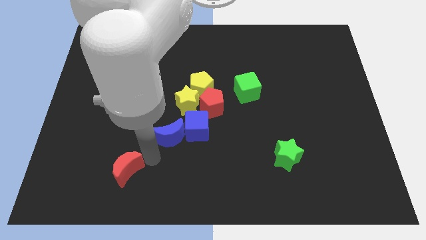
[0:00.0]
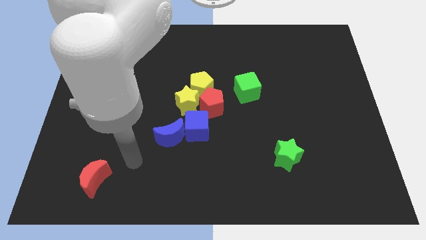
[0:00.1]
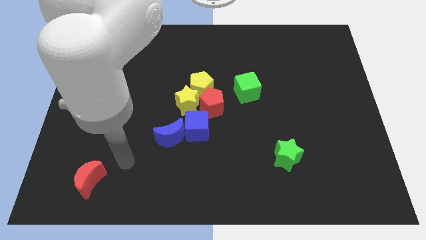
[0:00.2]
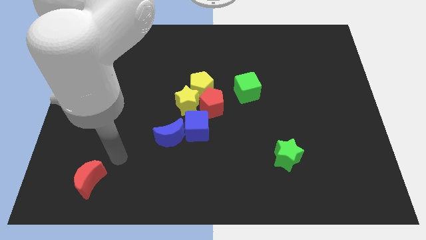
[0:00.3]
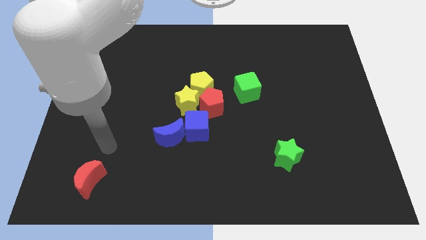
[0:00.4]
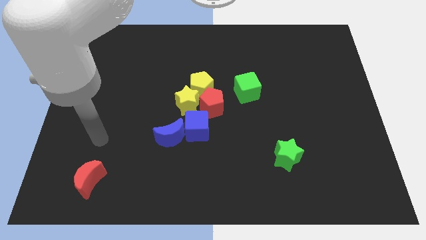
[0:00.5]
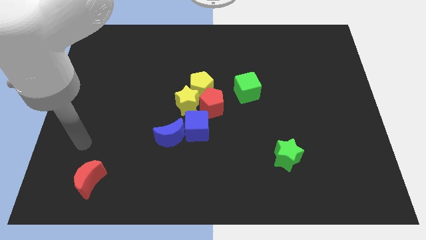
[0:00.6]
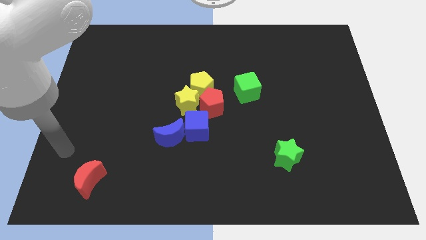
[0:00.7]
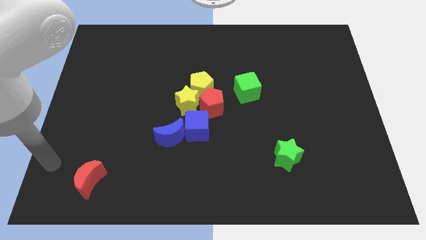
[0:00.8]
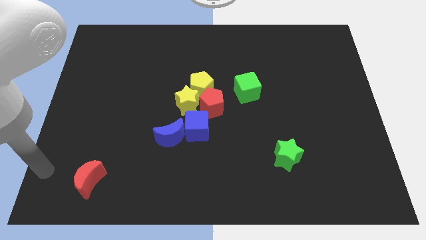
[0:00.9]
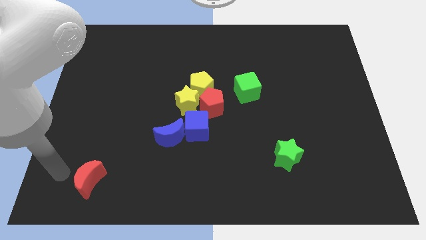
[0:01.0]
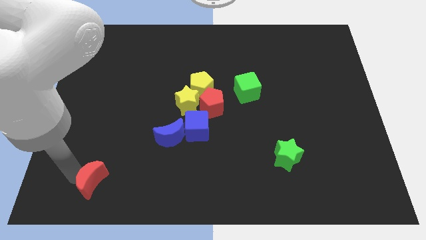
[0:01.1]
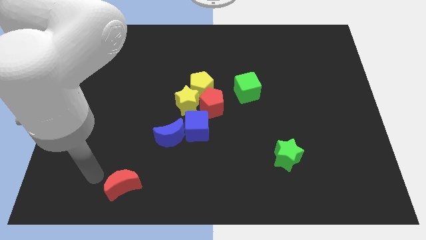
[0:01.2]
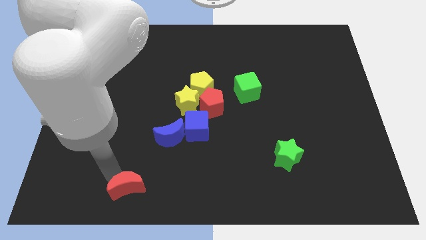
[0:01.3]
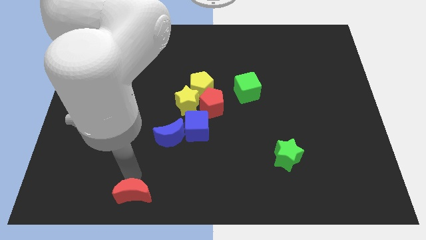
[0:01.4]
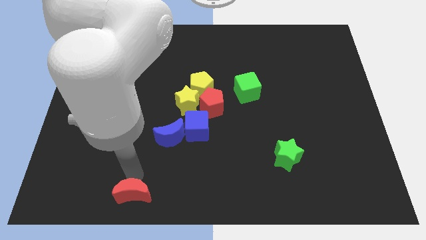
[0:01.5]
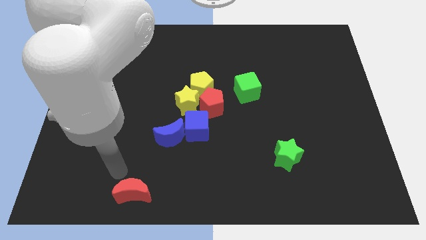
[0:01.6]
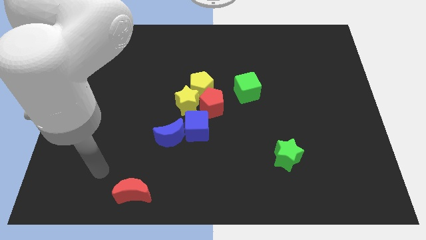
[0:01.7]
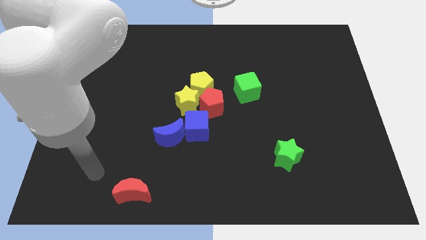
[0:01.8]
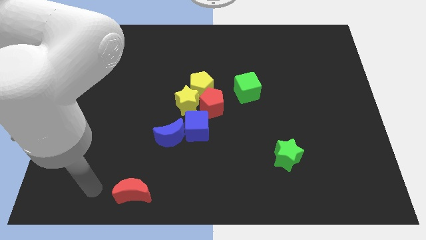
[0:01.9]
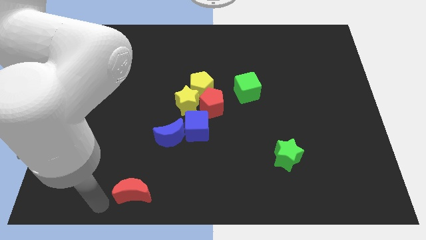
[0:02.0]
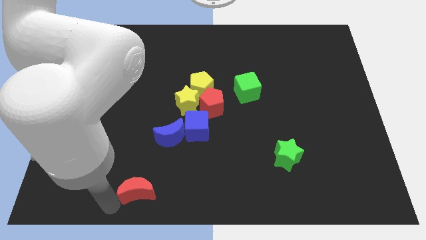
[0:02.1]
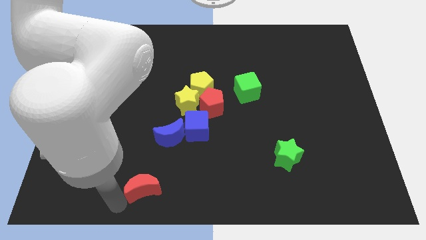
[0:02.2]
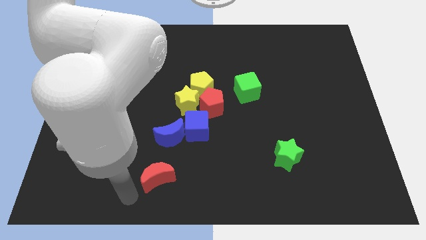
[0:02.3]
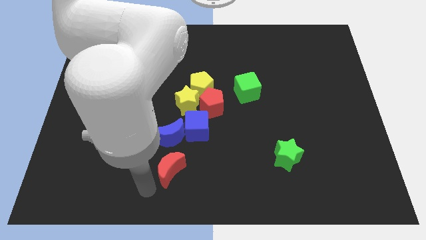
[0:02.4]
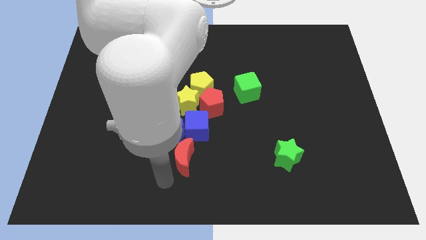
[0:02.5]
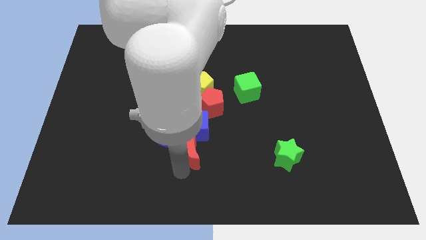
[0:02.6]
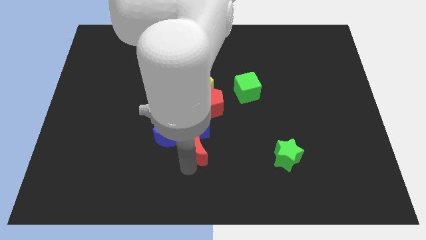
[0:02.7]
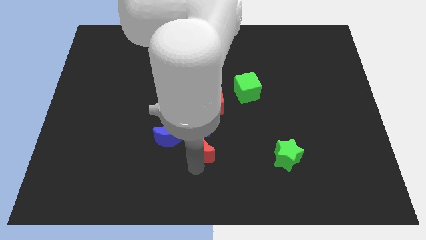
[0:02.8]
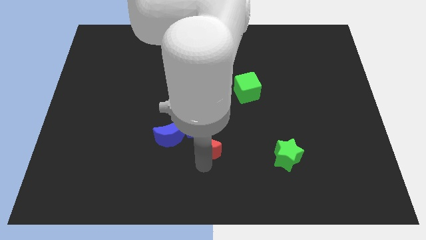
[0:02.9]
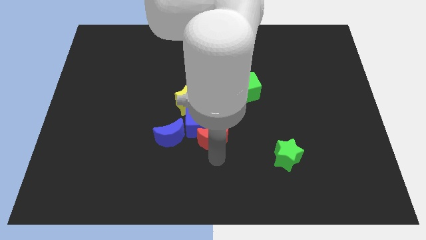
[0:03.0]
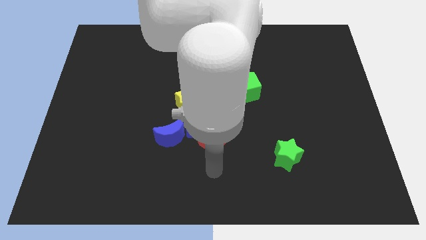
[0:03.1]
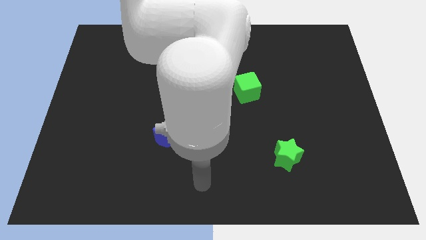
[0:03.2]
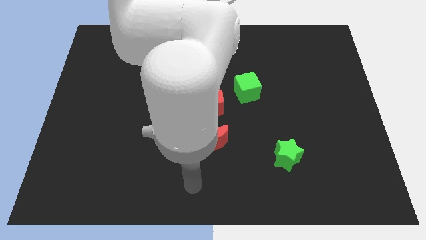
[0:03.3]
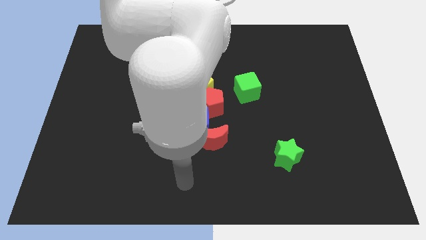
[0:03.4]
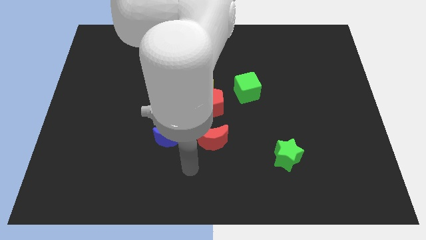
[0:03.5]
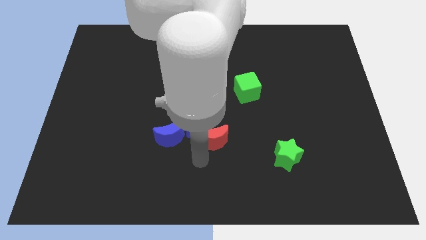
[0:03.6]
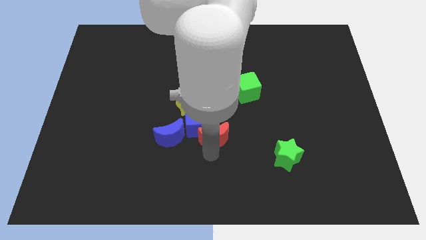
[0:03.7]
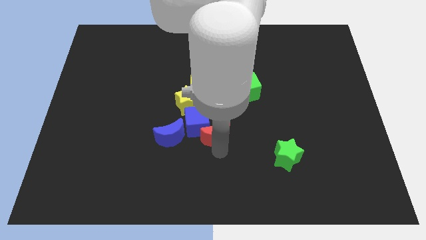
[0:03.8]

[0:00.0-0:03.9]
move the red moon to the blue cube

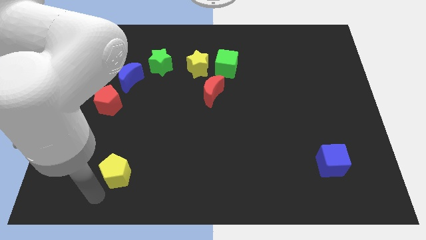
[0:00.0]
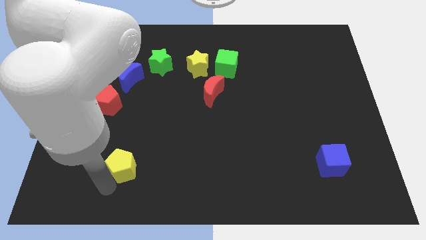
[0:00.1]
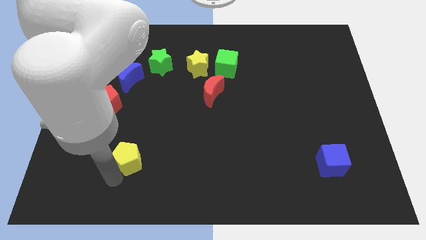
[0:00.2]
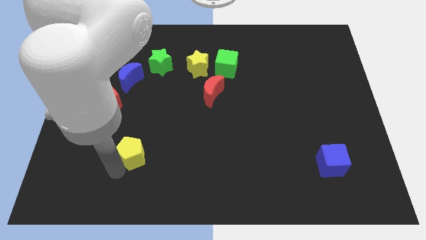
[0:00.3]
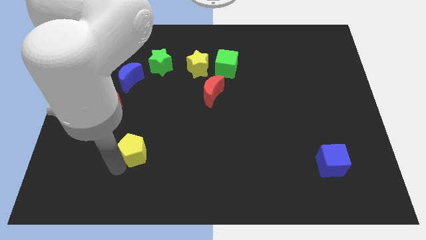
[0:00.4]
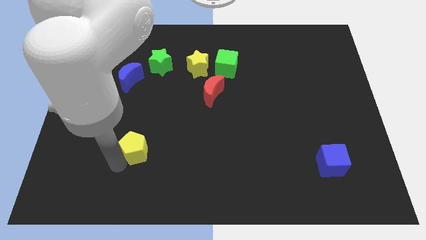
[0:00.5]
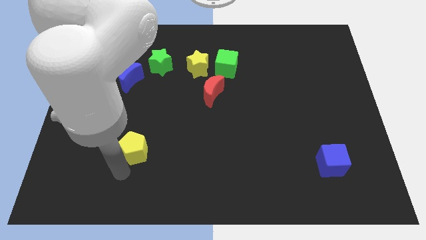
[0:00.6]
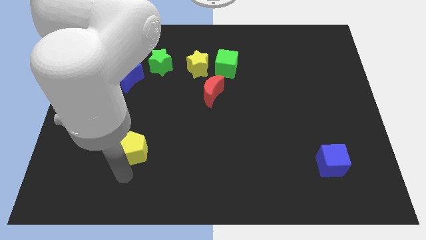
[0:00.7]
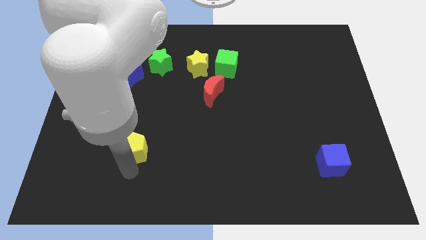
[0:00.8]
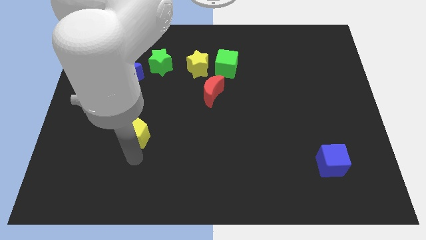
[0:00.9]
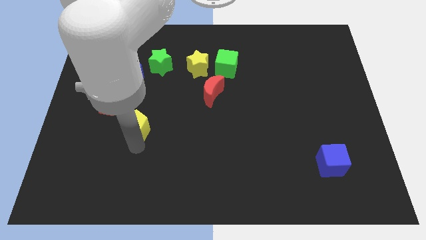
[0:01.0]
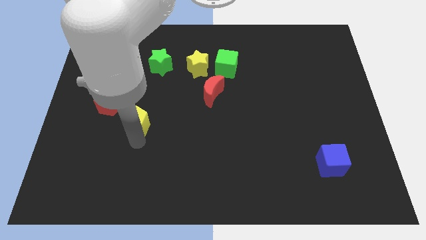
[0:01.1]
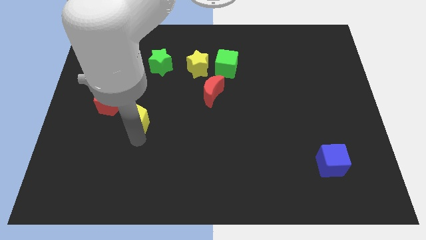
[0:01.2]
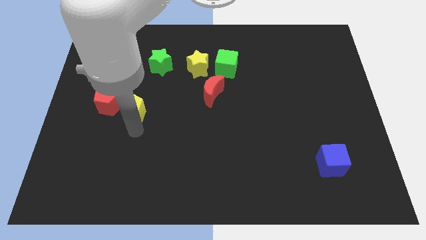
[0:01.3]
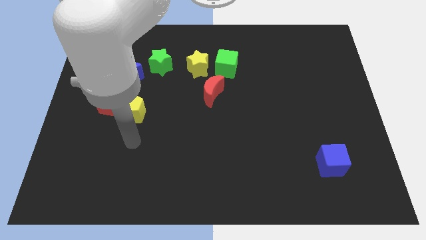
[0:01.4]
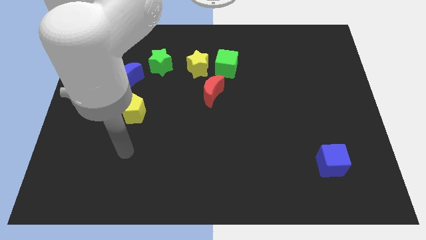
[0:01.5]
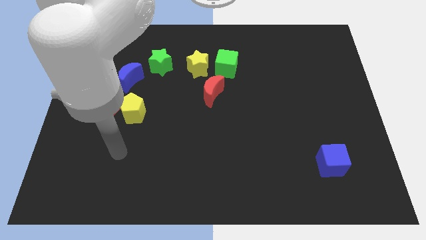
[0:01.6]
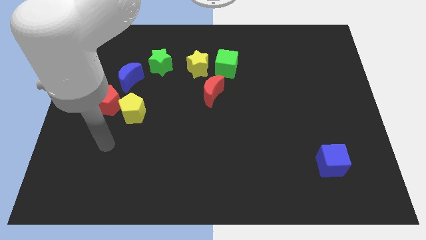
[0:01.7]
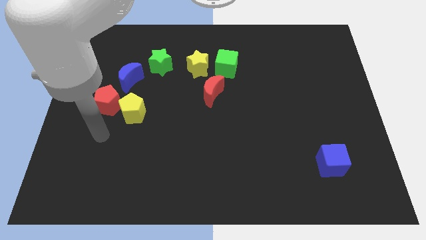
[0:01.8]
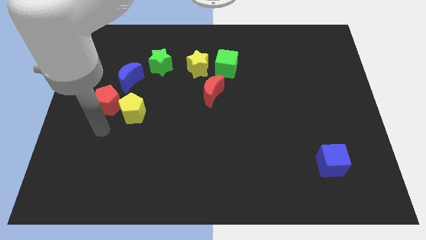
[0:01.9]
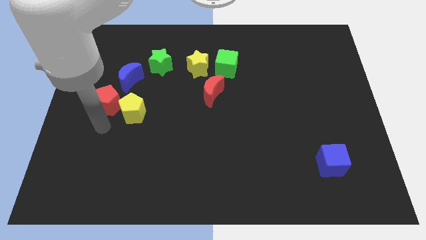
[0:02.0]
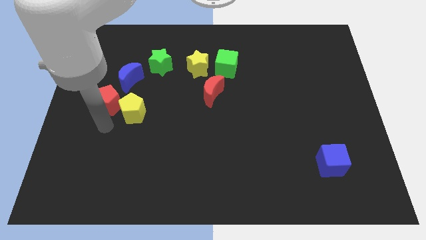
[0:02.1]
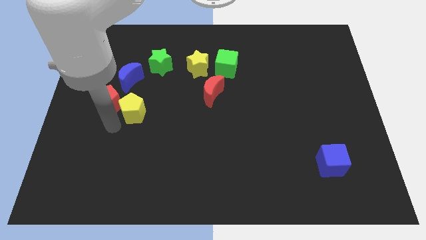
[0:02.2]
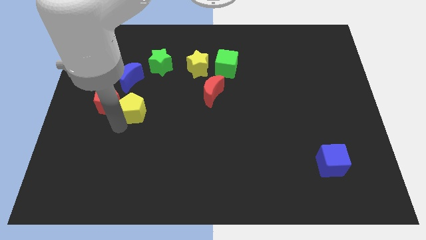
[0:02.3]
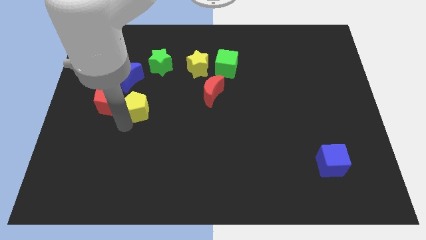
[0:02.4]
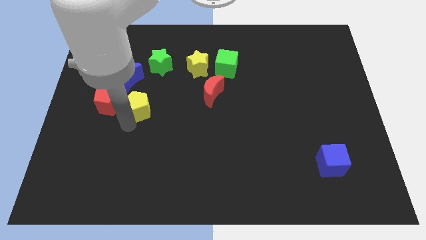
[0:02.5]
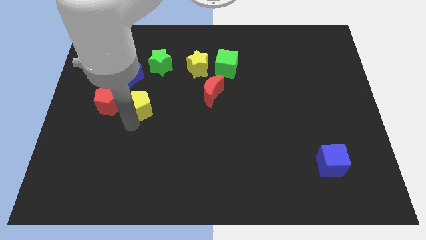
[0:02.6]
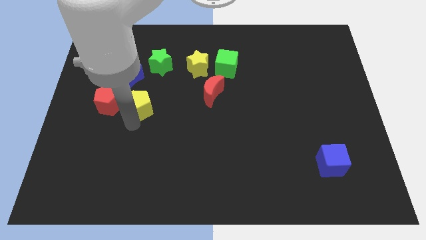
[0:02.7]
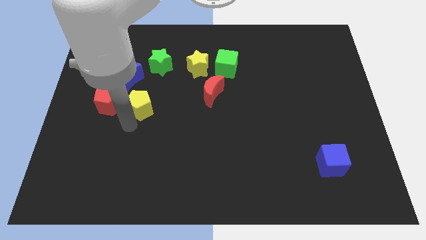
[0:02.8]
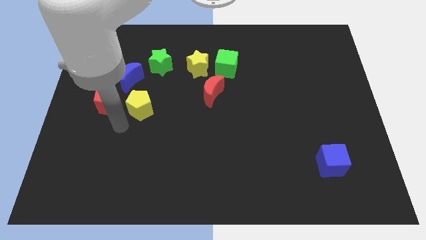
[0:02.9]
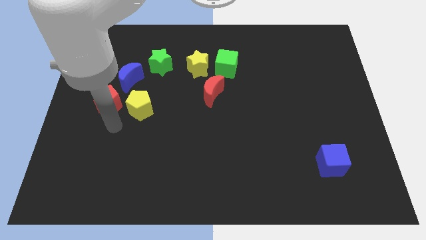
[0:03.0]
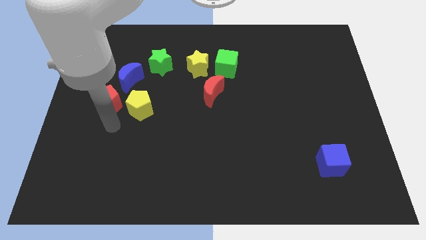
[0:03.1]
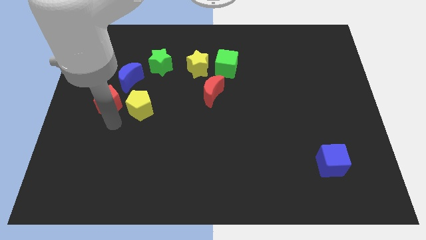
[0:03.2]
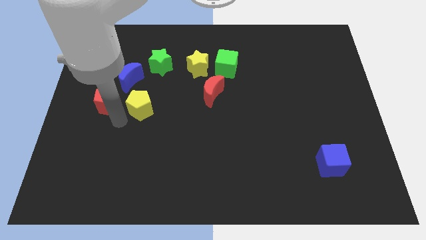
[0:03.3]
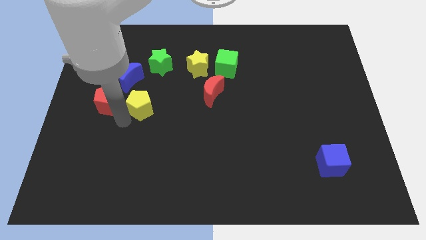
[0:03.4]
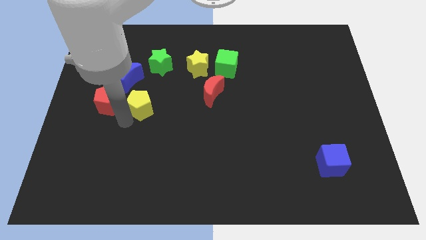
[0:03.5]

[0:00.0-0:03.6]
place the yellow pentagon towards the right side of the red pentagon

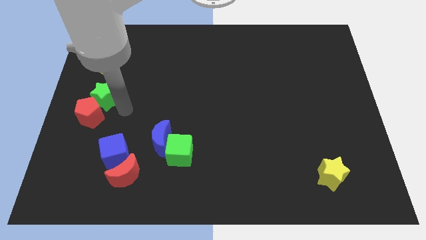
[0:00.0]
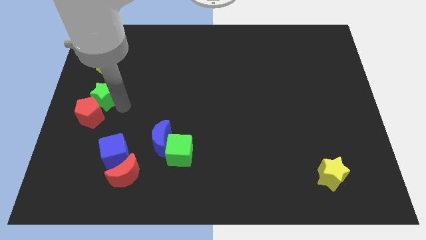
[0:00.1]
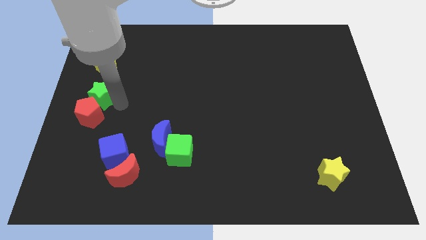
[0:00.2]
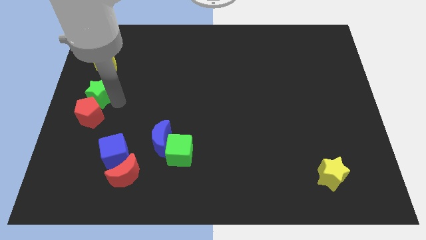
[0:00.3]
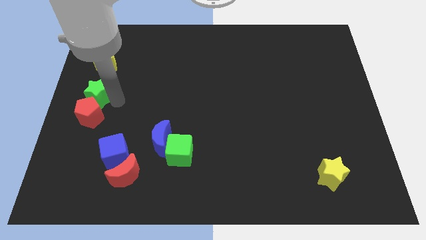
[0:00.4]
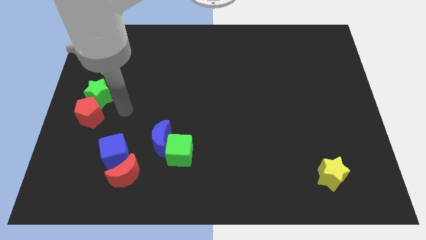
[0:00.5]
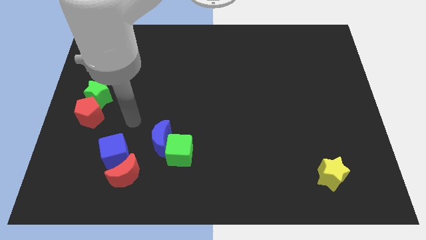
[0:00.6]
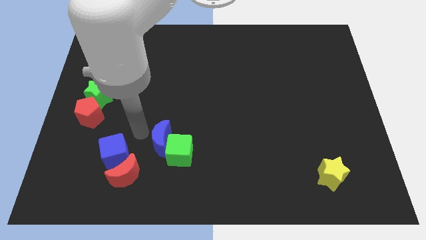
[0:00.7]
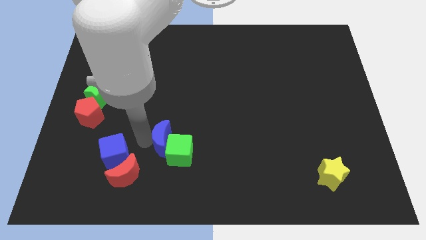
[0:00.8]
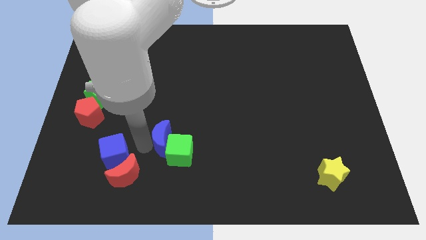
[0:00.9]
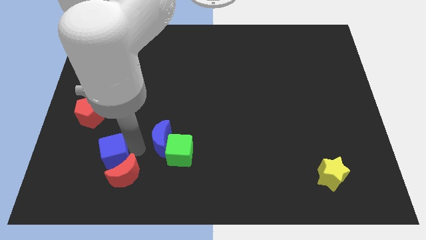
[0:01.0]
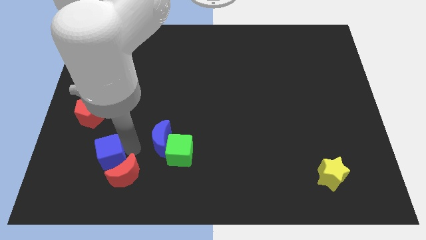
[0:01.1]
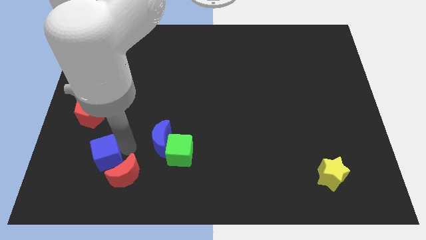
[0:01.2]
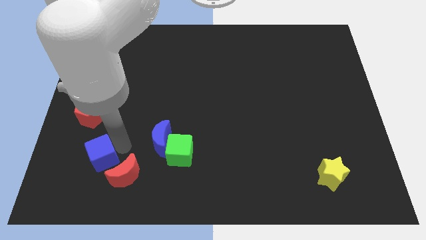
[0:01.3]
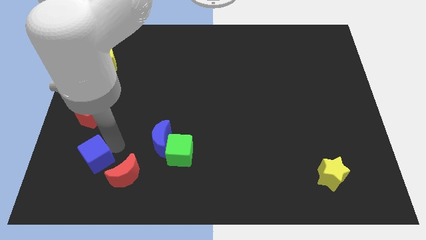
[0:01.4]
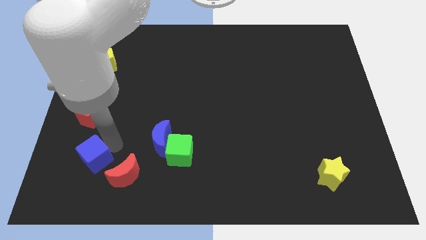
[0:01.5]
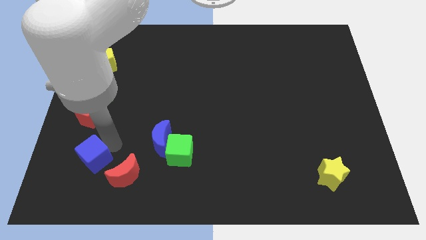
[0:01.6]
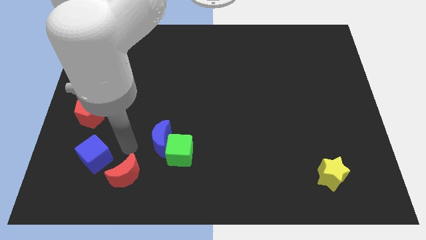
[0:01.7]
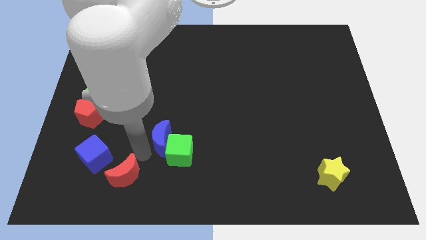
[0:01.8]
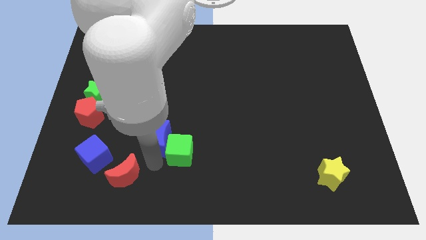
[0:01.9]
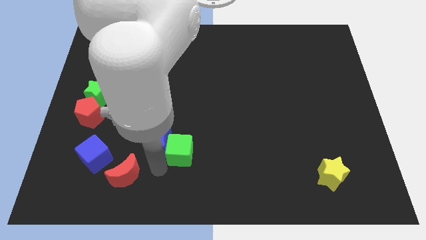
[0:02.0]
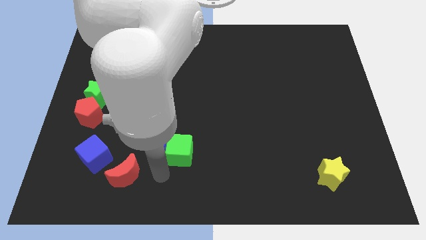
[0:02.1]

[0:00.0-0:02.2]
move the blue cube below the red pentagon
